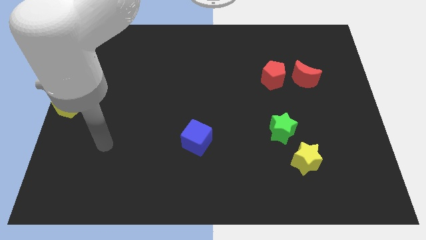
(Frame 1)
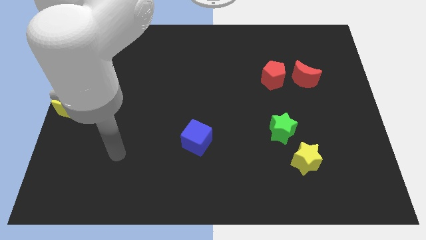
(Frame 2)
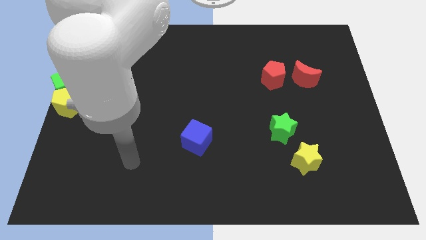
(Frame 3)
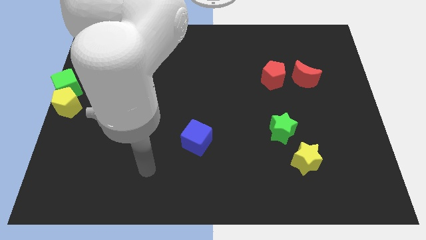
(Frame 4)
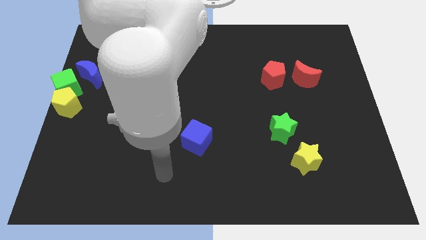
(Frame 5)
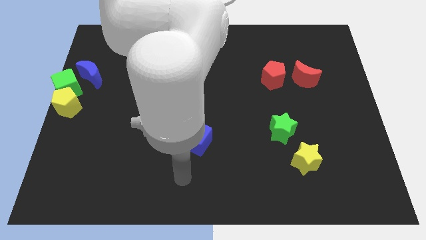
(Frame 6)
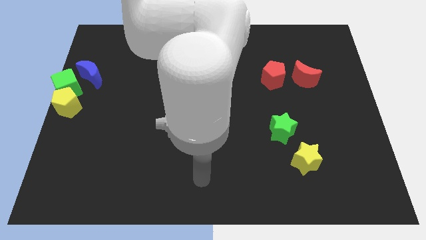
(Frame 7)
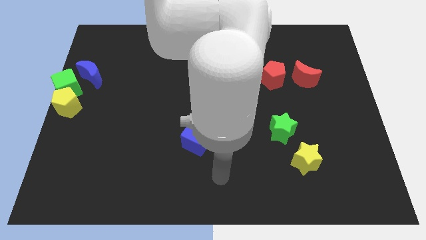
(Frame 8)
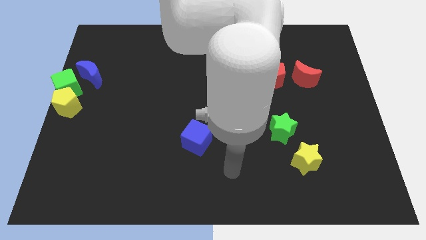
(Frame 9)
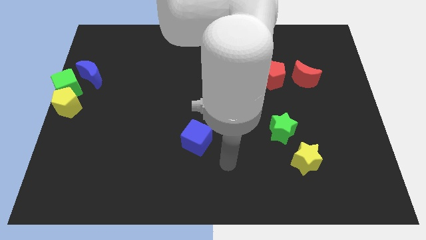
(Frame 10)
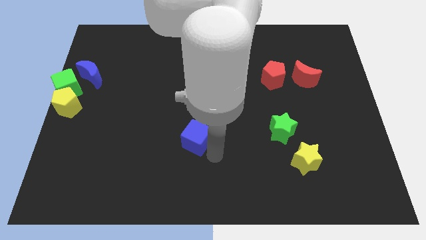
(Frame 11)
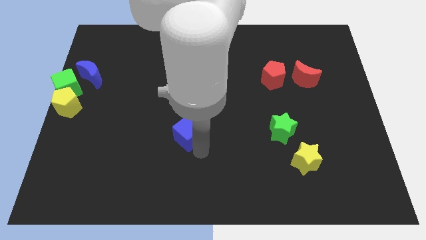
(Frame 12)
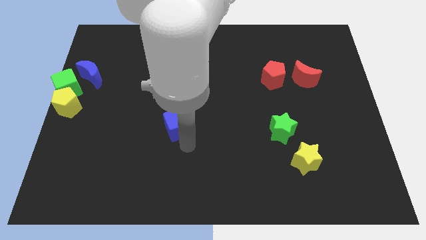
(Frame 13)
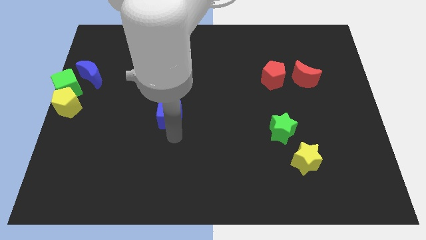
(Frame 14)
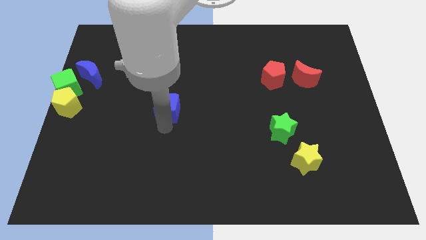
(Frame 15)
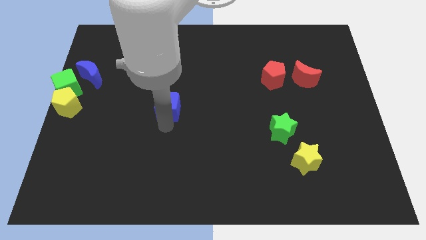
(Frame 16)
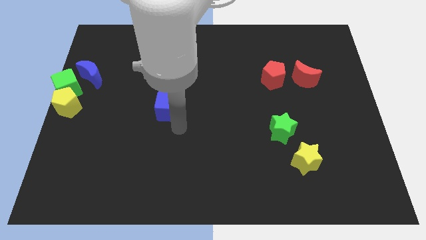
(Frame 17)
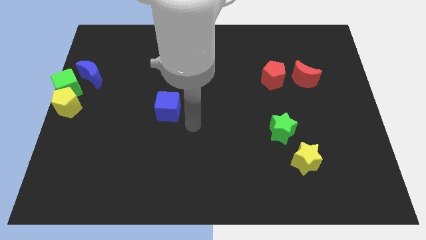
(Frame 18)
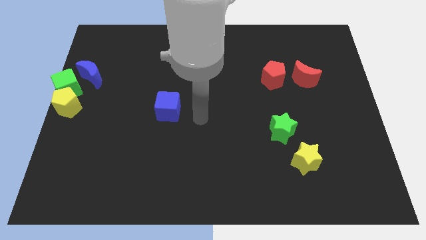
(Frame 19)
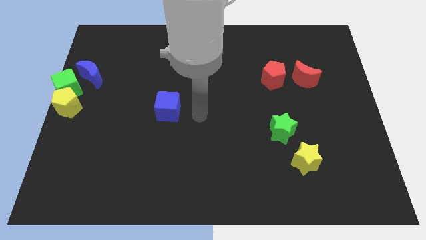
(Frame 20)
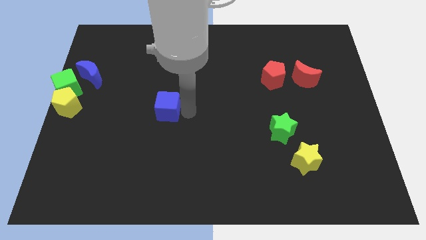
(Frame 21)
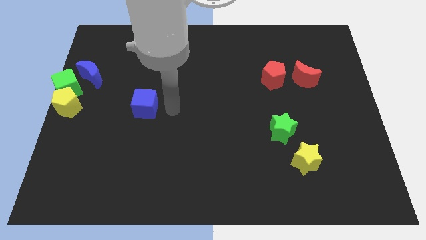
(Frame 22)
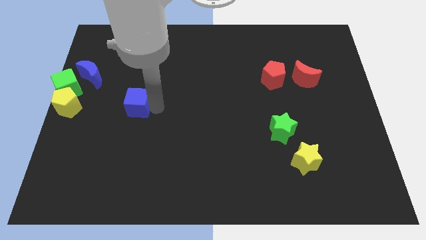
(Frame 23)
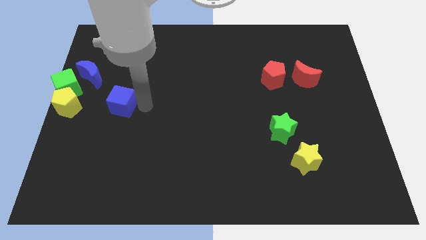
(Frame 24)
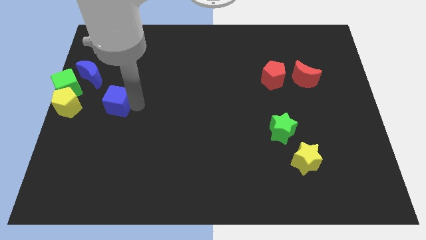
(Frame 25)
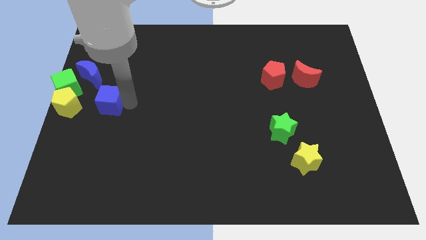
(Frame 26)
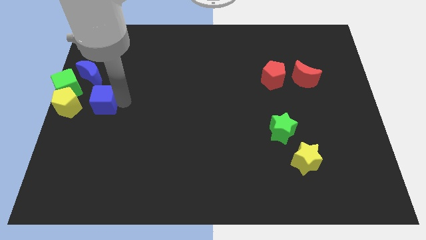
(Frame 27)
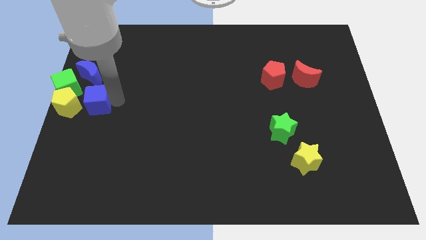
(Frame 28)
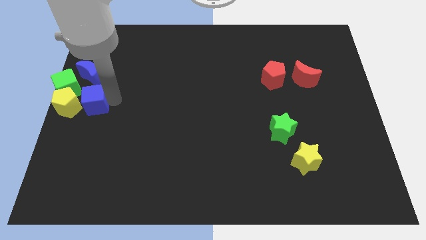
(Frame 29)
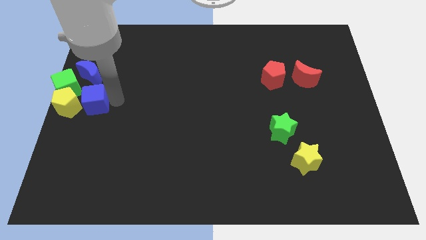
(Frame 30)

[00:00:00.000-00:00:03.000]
move the blue cube below the blue moon

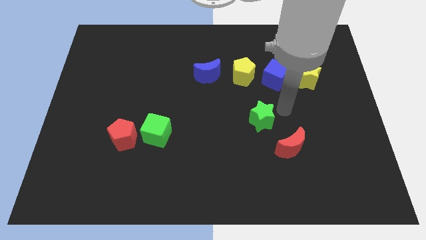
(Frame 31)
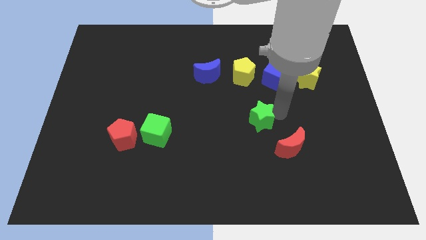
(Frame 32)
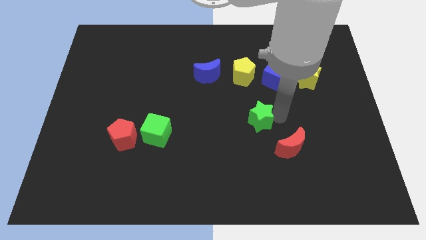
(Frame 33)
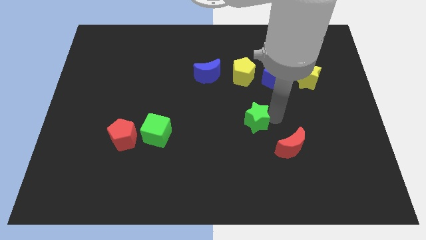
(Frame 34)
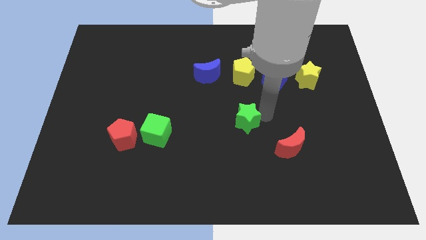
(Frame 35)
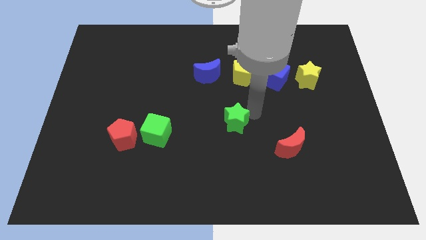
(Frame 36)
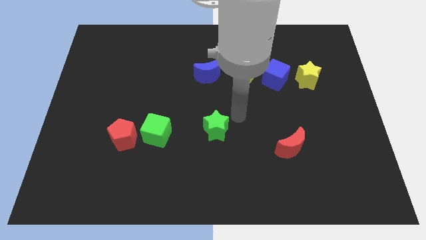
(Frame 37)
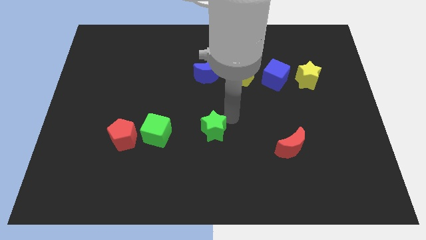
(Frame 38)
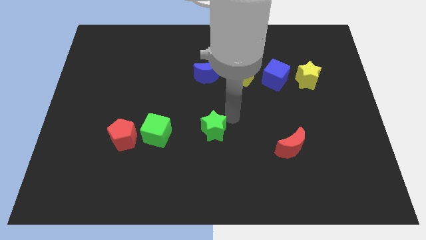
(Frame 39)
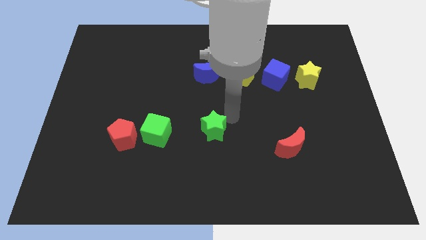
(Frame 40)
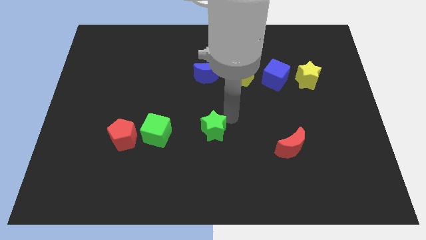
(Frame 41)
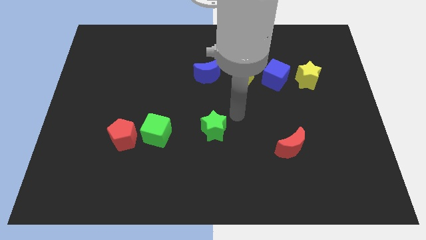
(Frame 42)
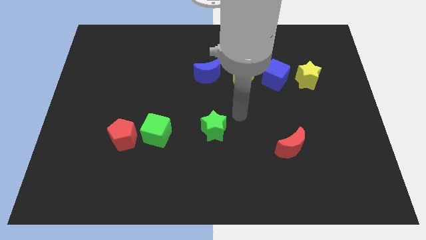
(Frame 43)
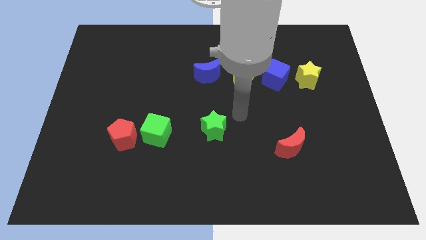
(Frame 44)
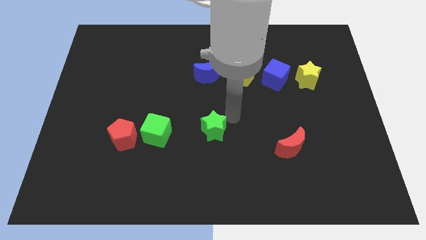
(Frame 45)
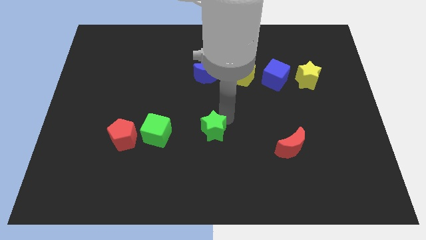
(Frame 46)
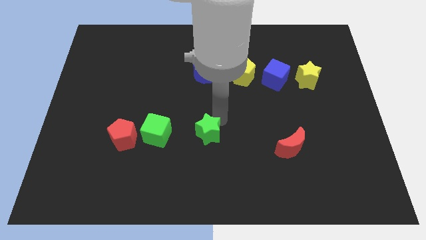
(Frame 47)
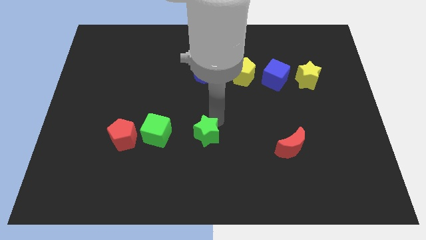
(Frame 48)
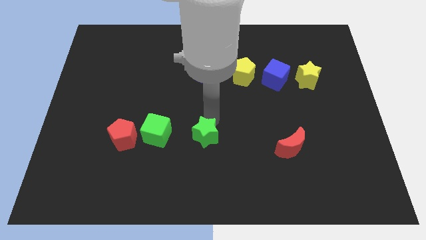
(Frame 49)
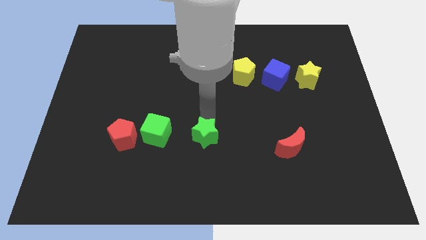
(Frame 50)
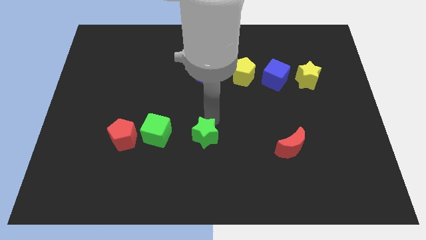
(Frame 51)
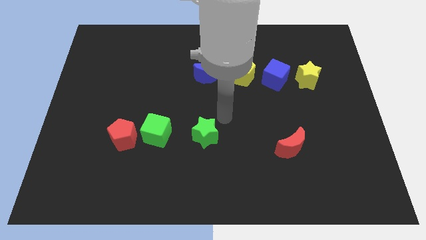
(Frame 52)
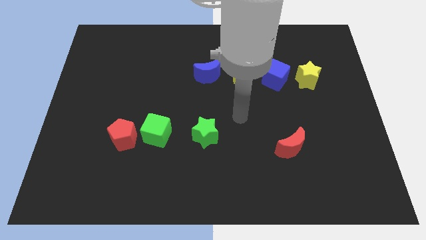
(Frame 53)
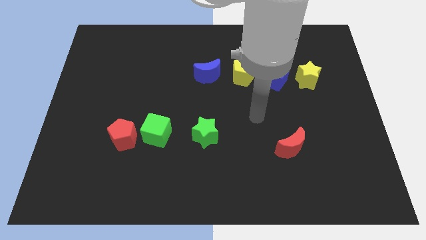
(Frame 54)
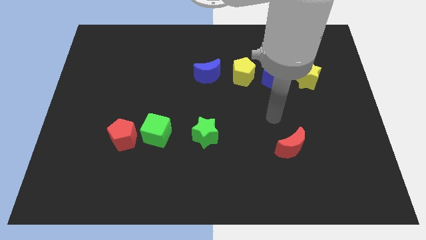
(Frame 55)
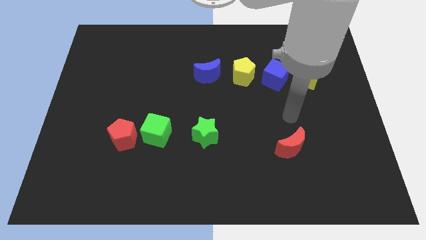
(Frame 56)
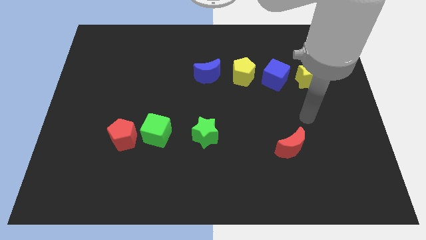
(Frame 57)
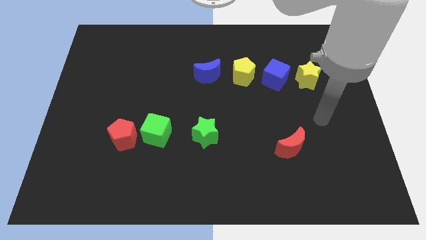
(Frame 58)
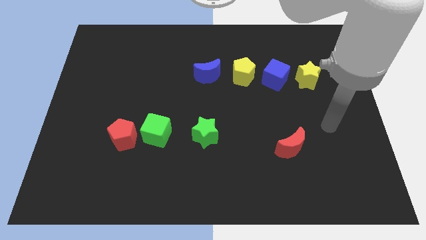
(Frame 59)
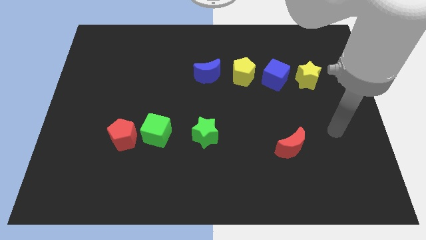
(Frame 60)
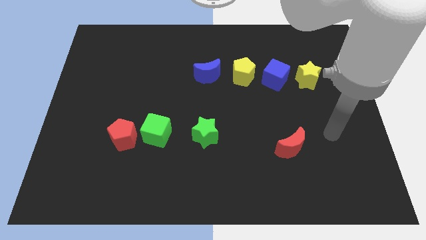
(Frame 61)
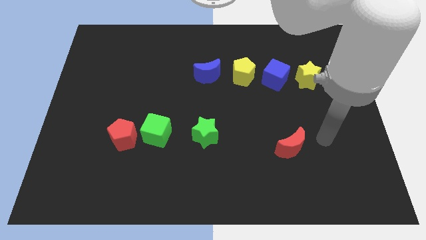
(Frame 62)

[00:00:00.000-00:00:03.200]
push the green star towards green cube

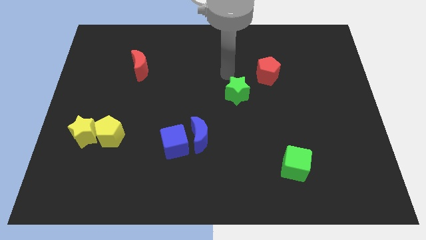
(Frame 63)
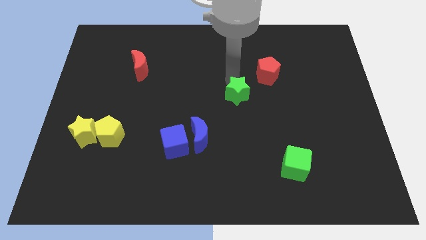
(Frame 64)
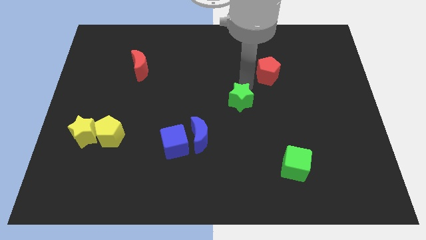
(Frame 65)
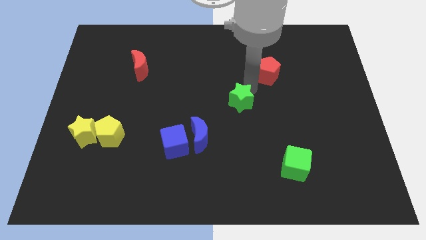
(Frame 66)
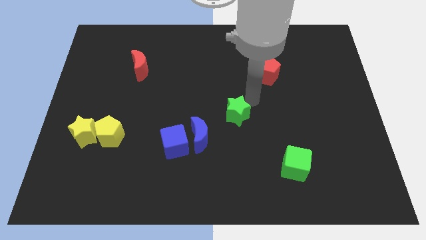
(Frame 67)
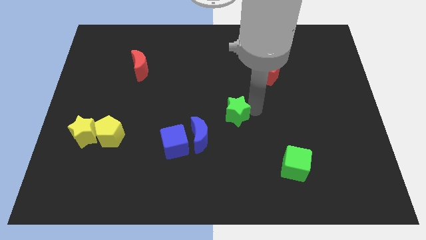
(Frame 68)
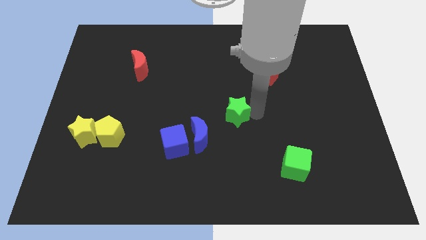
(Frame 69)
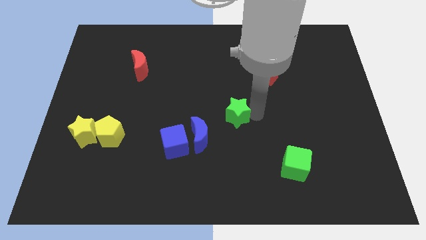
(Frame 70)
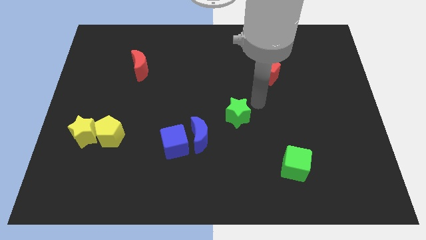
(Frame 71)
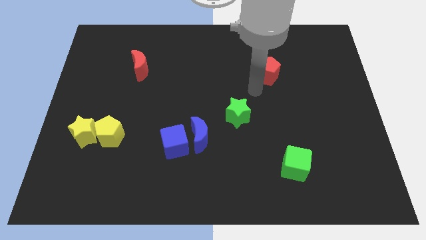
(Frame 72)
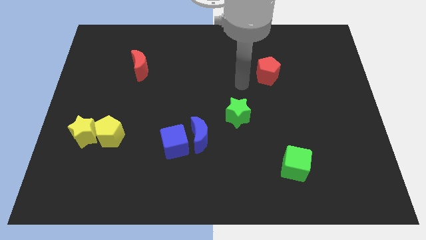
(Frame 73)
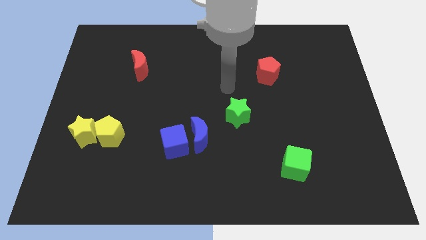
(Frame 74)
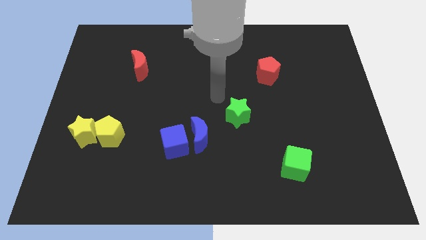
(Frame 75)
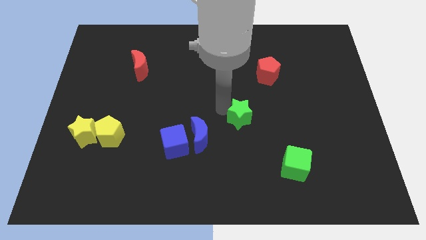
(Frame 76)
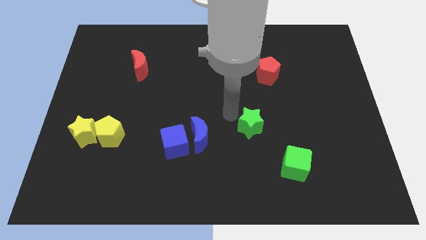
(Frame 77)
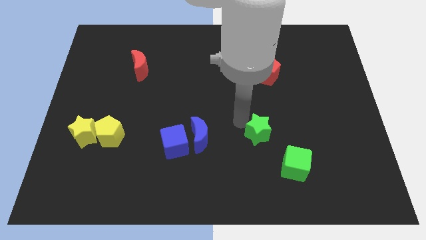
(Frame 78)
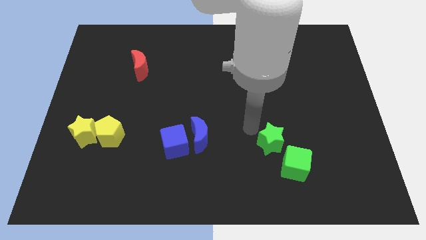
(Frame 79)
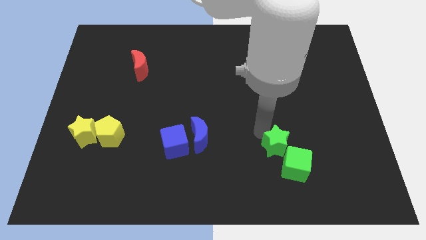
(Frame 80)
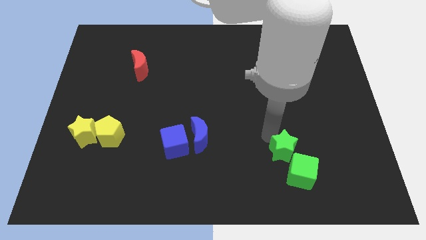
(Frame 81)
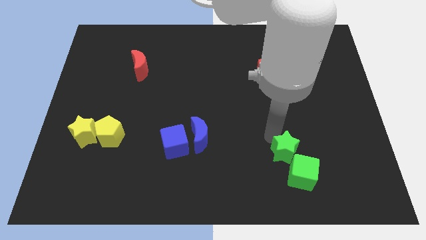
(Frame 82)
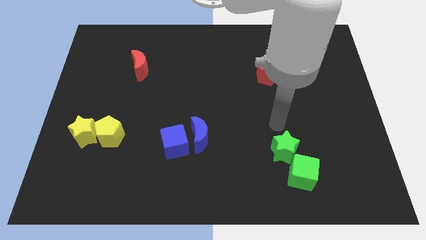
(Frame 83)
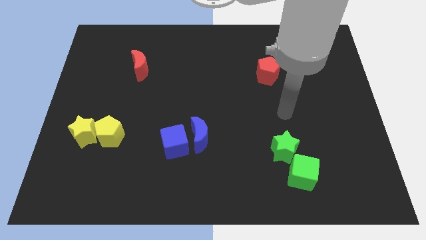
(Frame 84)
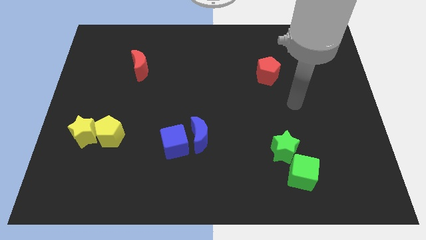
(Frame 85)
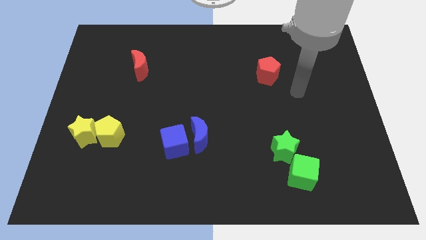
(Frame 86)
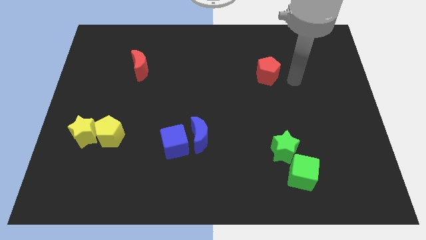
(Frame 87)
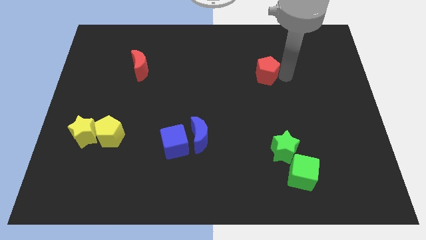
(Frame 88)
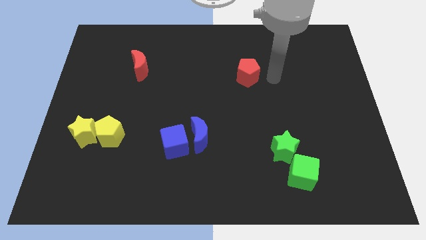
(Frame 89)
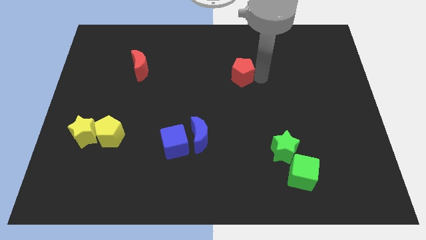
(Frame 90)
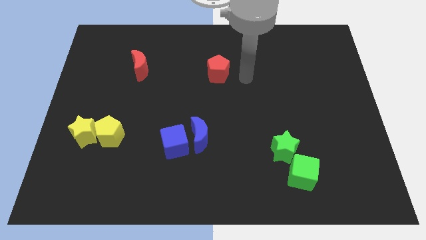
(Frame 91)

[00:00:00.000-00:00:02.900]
push the green star into the green cube
